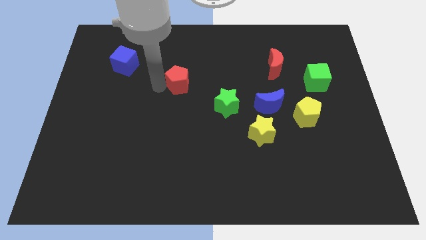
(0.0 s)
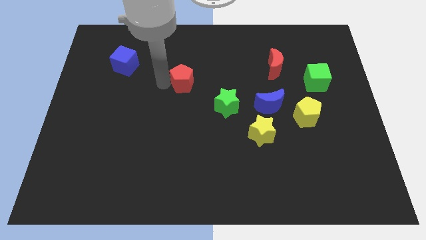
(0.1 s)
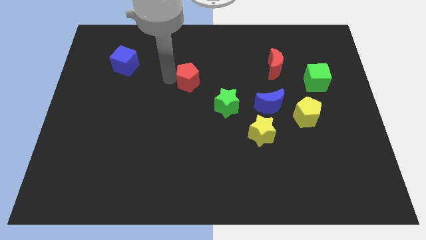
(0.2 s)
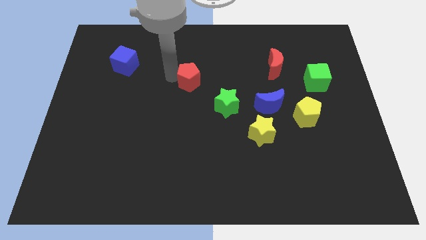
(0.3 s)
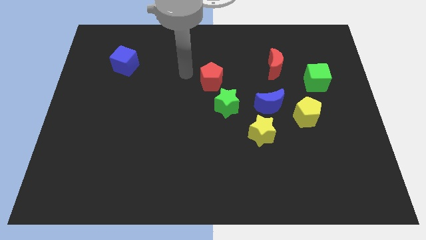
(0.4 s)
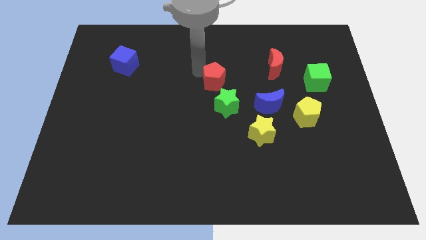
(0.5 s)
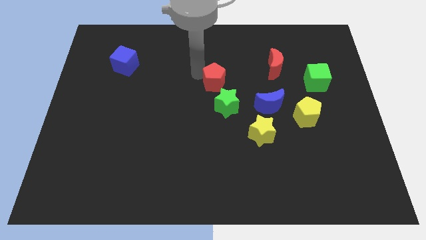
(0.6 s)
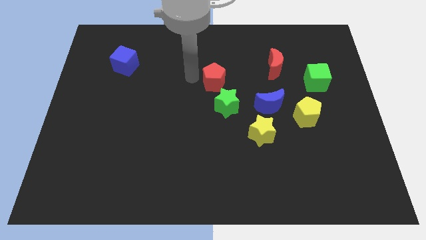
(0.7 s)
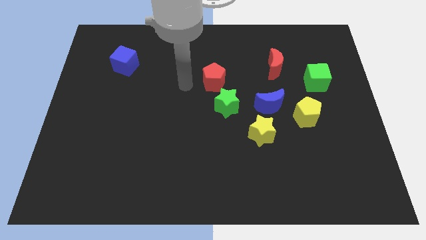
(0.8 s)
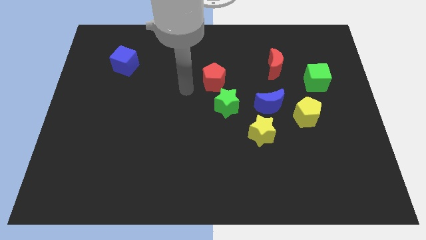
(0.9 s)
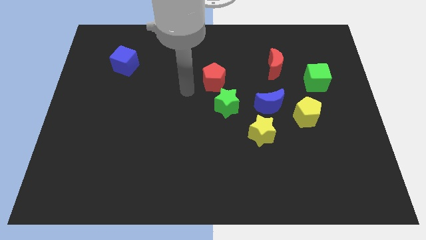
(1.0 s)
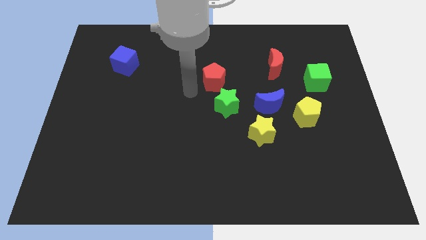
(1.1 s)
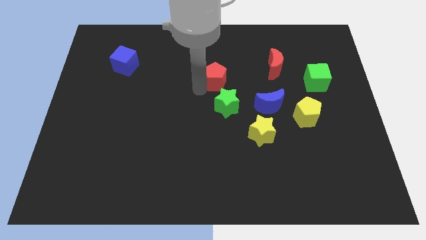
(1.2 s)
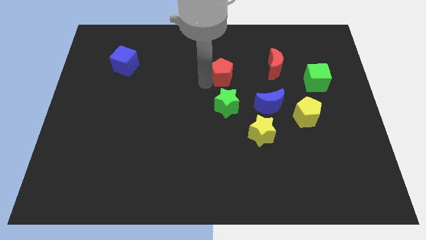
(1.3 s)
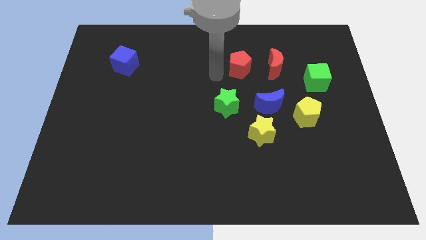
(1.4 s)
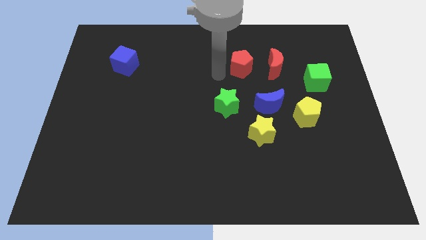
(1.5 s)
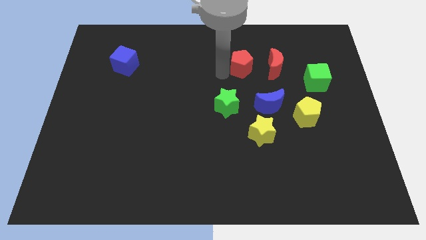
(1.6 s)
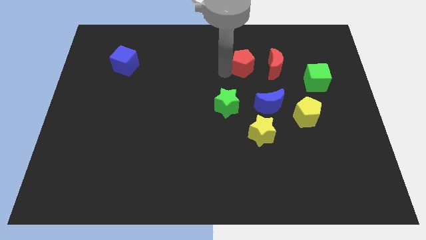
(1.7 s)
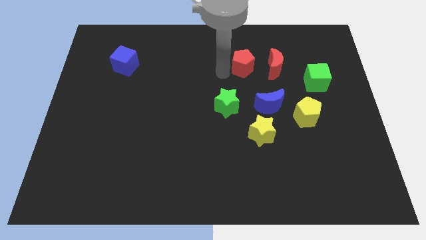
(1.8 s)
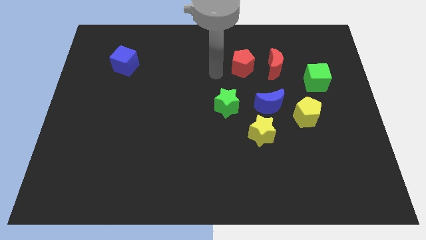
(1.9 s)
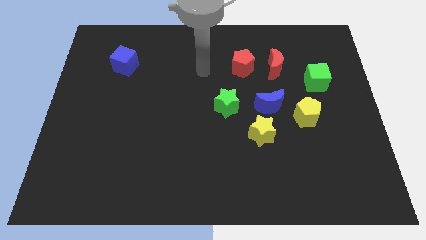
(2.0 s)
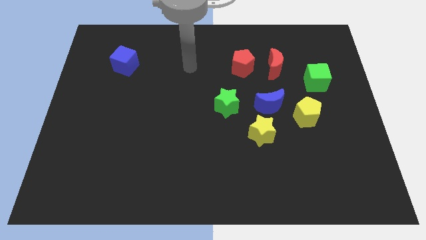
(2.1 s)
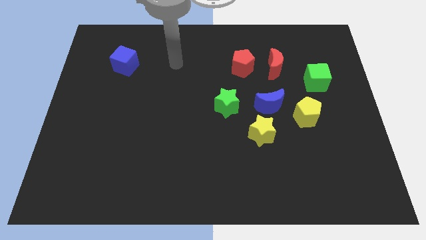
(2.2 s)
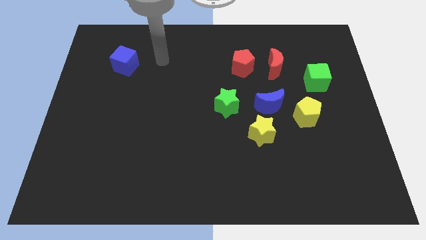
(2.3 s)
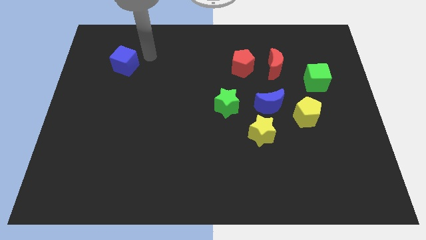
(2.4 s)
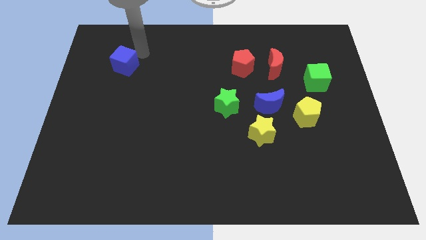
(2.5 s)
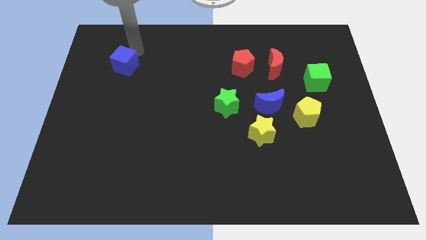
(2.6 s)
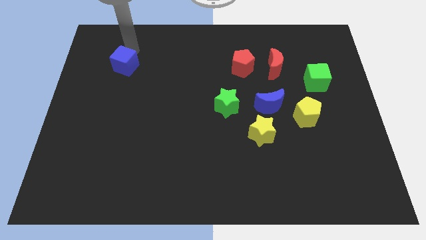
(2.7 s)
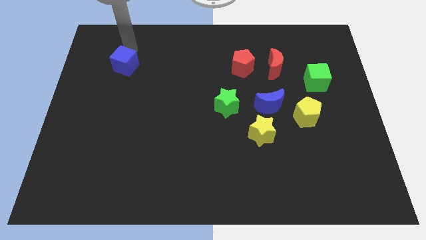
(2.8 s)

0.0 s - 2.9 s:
place your arm above blue cube

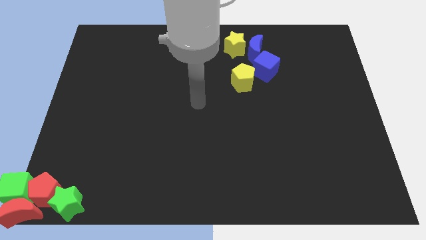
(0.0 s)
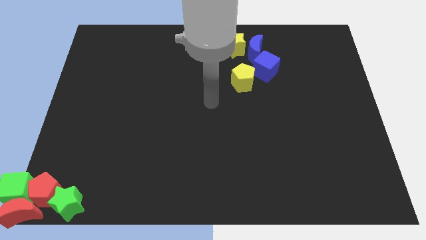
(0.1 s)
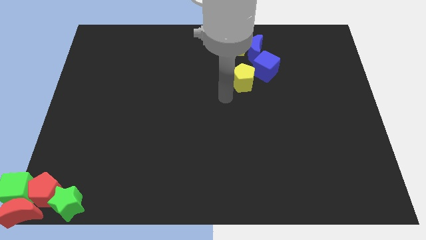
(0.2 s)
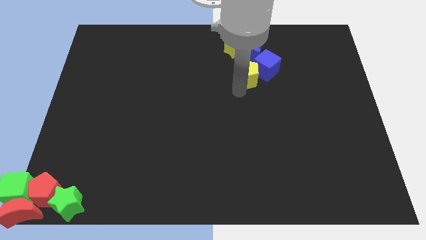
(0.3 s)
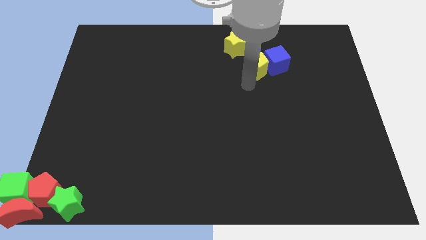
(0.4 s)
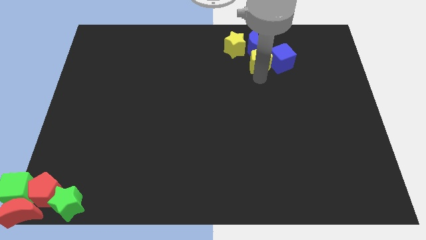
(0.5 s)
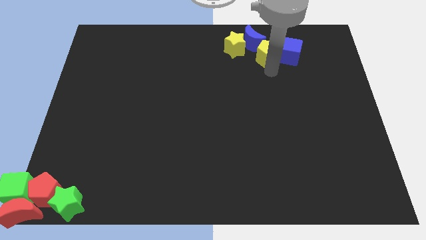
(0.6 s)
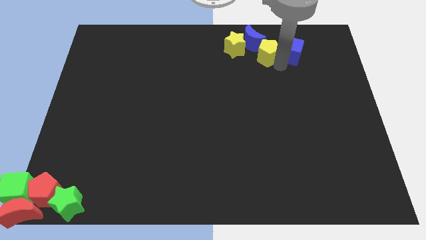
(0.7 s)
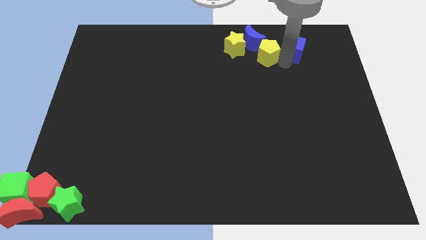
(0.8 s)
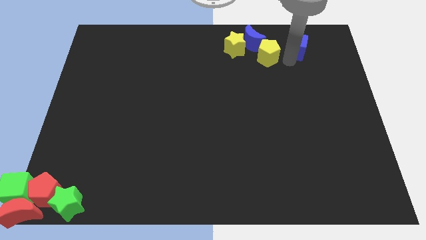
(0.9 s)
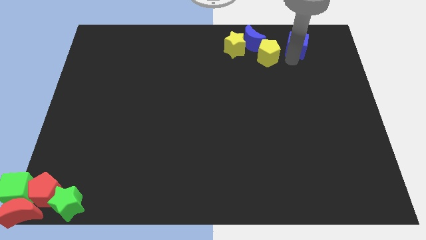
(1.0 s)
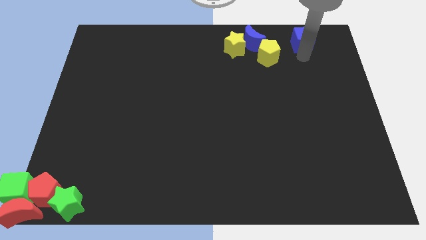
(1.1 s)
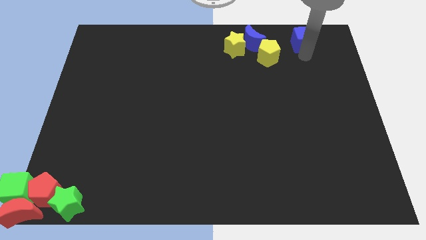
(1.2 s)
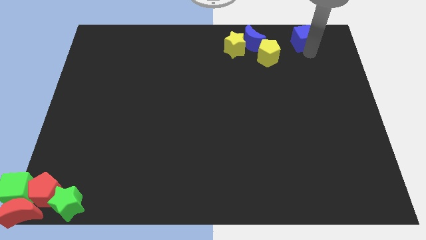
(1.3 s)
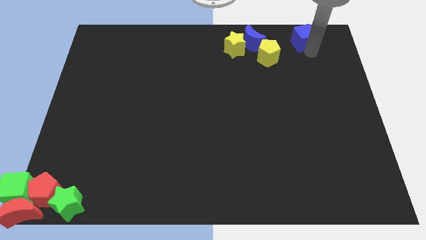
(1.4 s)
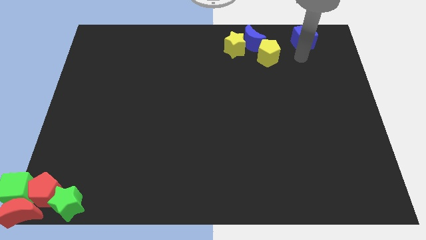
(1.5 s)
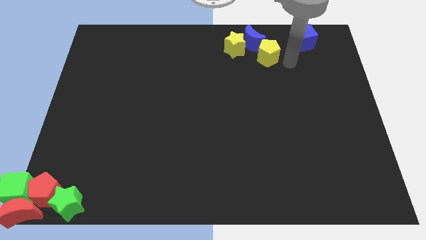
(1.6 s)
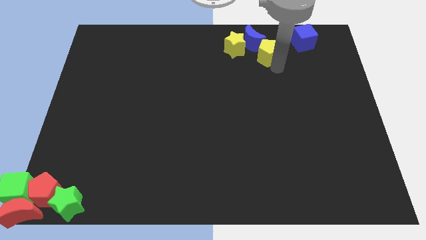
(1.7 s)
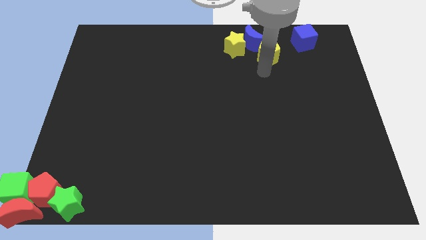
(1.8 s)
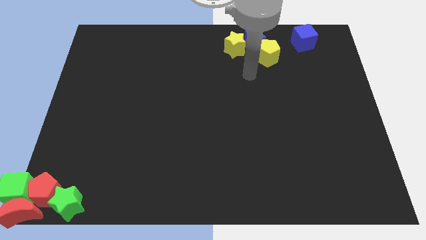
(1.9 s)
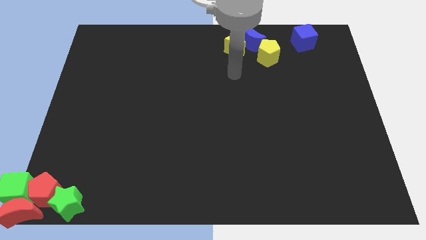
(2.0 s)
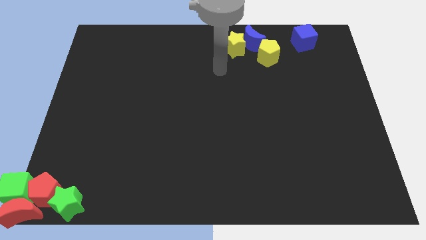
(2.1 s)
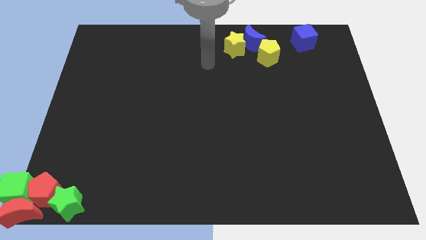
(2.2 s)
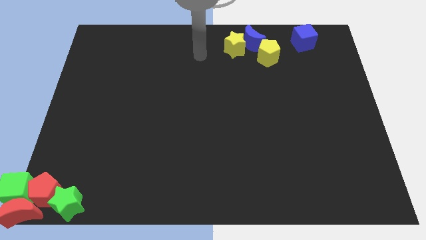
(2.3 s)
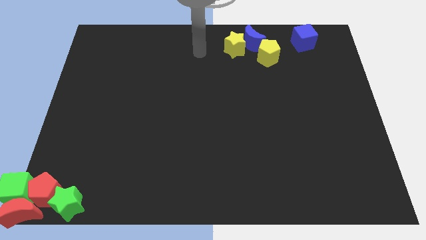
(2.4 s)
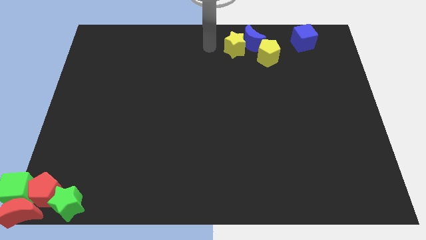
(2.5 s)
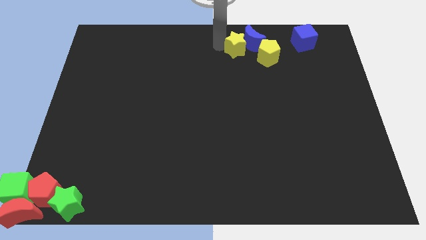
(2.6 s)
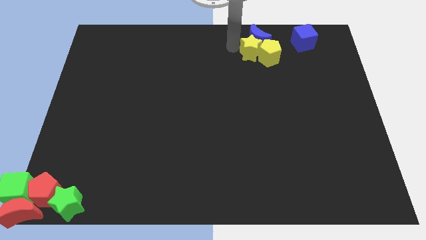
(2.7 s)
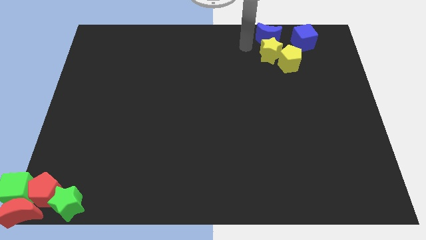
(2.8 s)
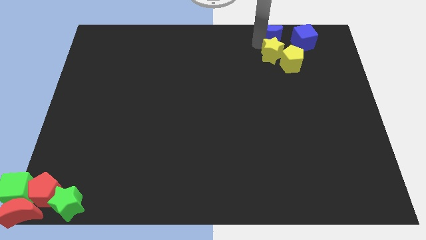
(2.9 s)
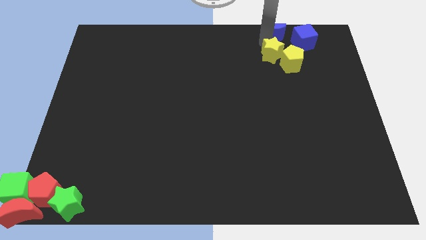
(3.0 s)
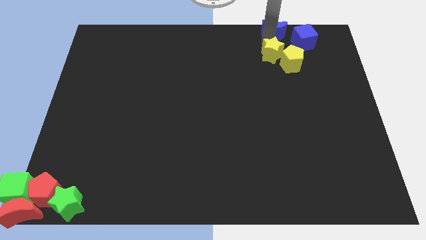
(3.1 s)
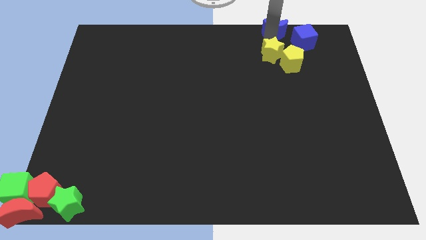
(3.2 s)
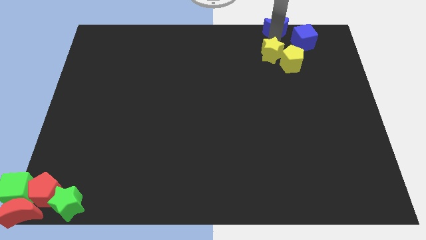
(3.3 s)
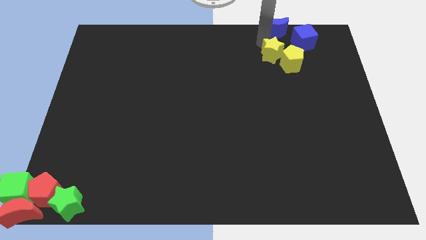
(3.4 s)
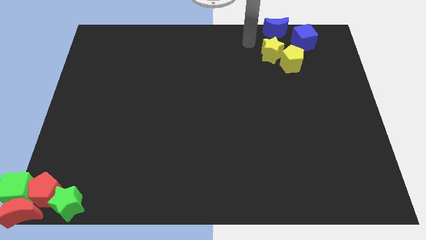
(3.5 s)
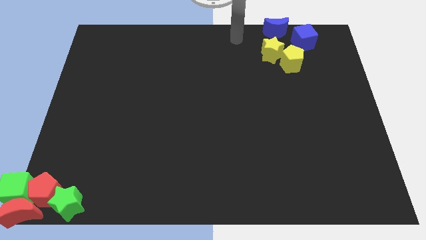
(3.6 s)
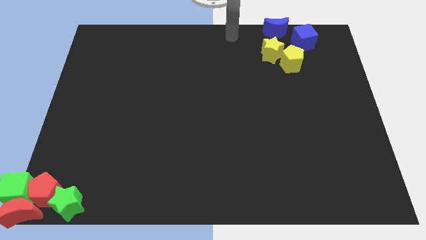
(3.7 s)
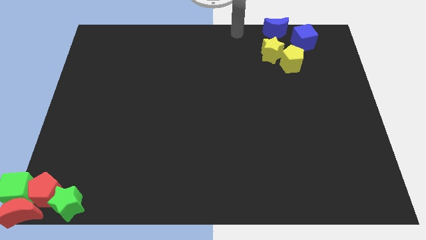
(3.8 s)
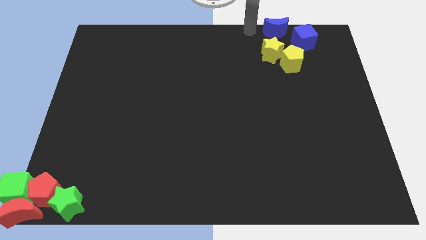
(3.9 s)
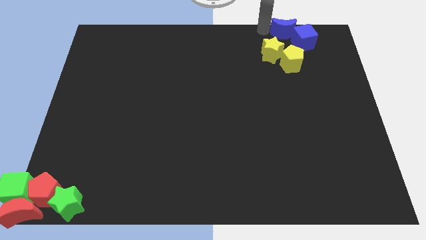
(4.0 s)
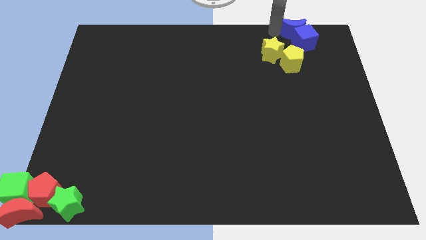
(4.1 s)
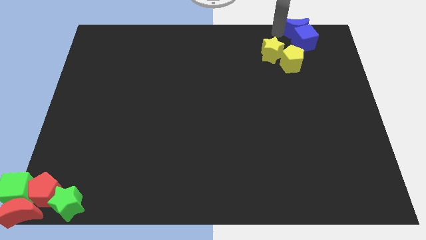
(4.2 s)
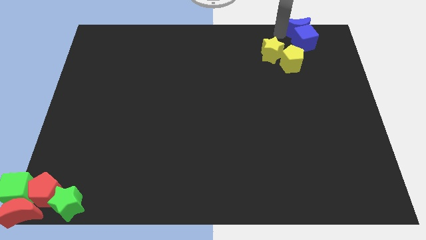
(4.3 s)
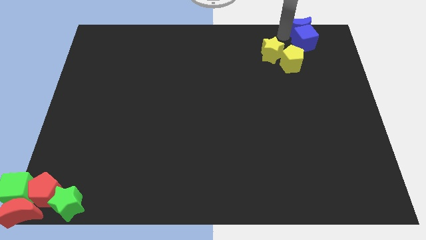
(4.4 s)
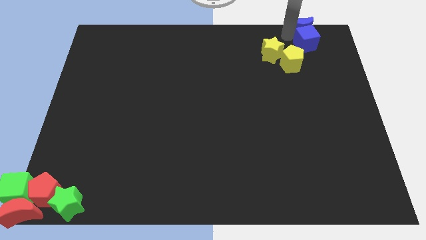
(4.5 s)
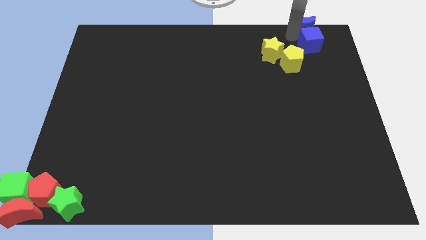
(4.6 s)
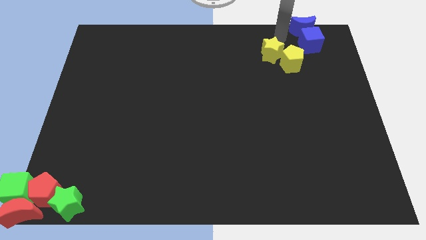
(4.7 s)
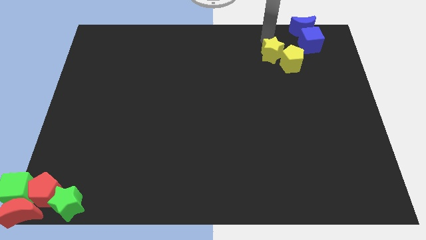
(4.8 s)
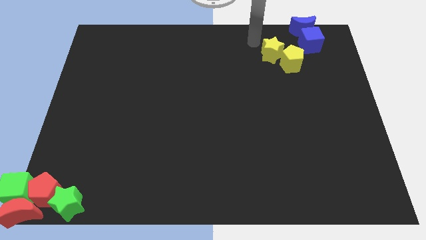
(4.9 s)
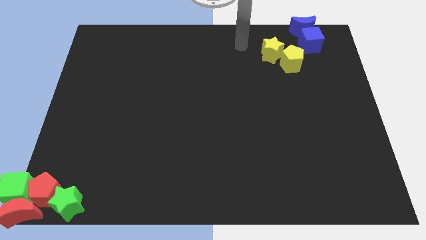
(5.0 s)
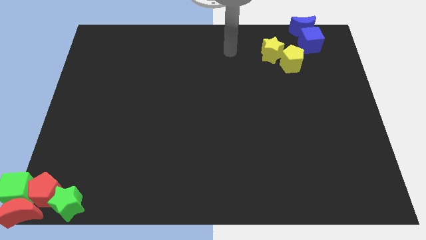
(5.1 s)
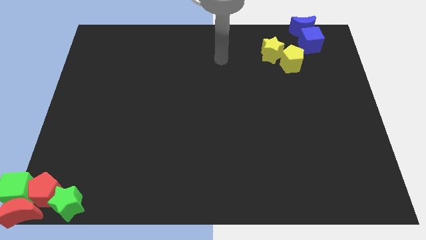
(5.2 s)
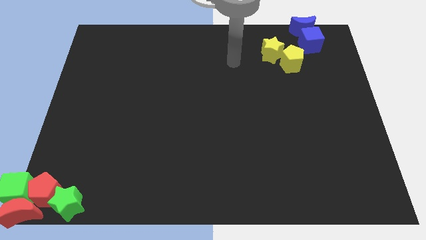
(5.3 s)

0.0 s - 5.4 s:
move the blue cube and blue crescent towards top right

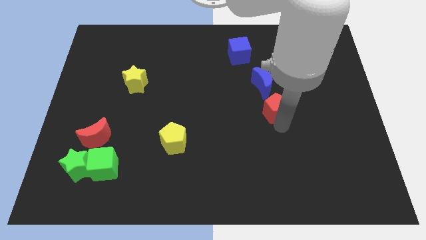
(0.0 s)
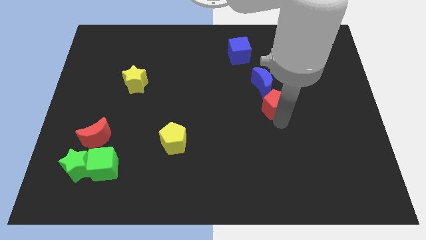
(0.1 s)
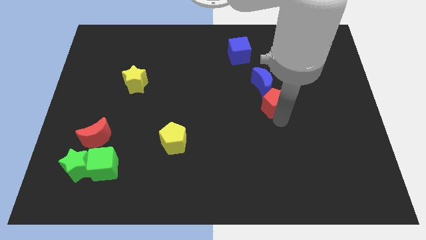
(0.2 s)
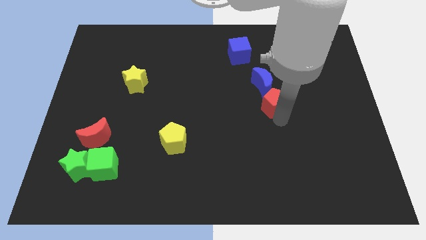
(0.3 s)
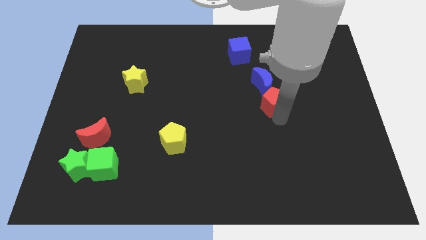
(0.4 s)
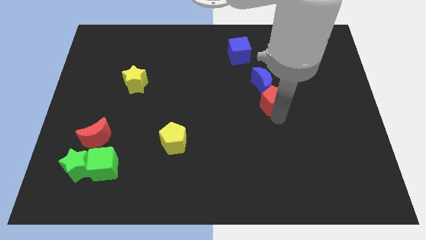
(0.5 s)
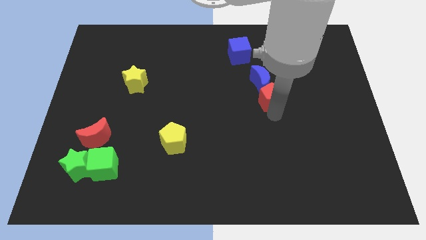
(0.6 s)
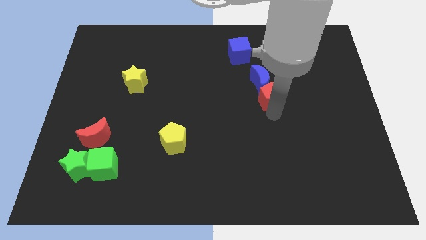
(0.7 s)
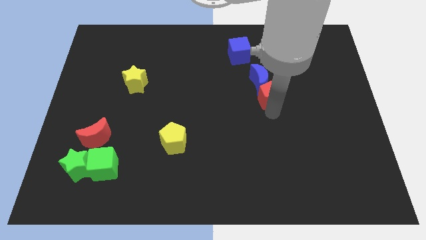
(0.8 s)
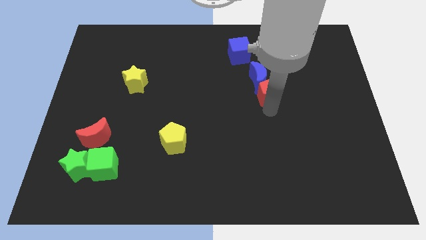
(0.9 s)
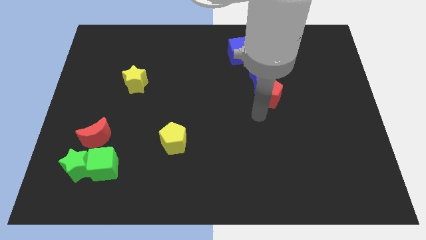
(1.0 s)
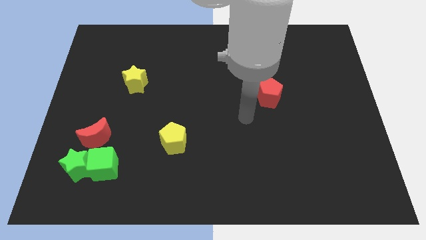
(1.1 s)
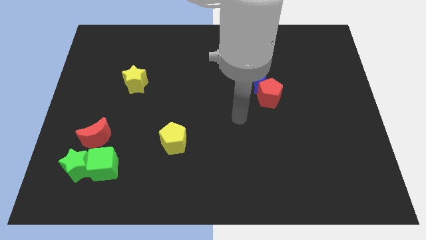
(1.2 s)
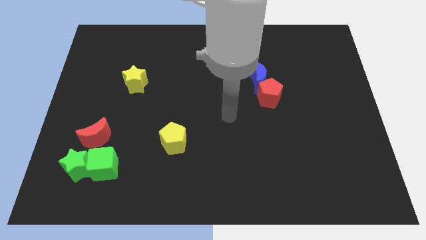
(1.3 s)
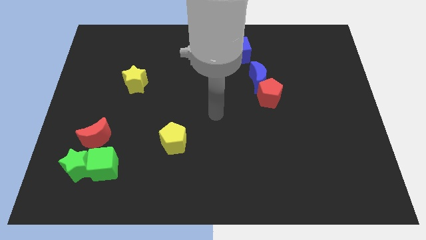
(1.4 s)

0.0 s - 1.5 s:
push the red pentagon into the blue crescent
